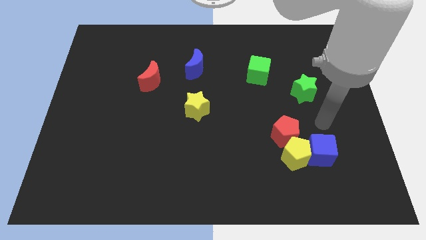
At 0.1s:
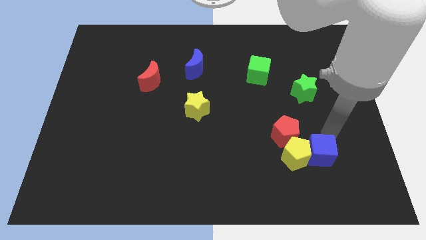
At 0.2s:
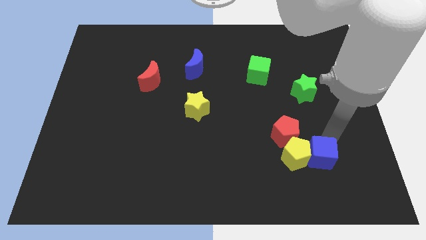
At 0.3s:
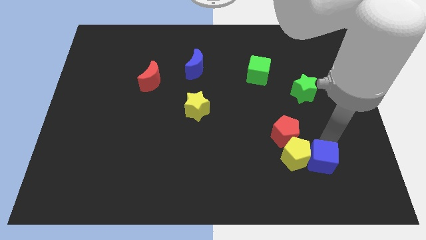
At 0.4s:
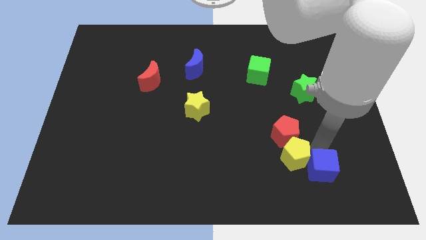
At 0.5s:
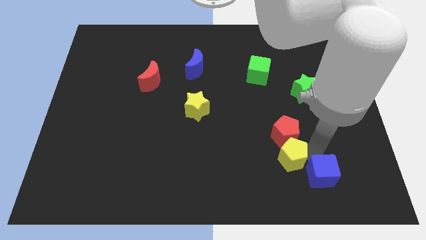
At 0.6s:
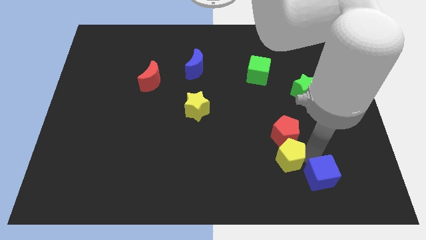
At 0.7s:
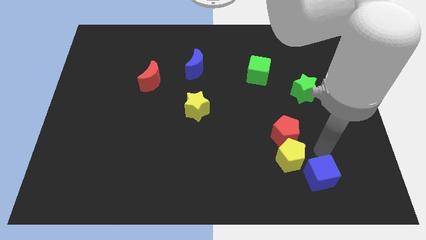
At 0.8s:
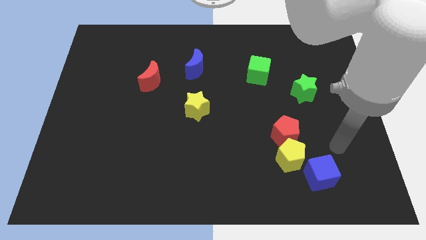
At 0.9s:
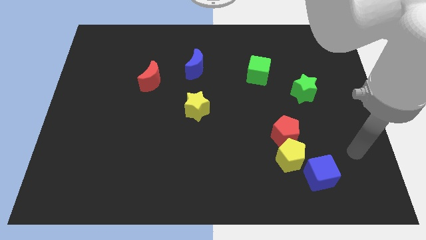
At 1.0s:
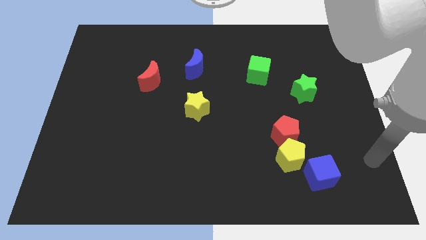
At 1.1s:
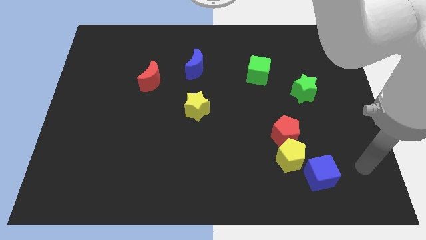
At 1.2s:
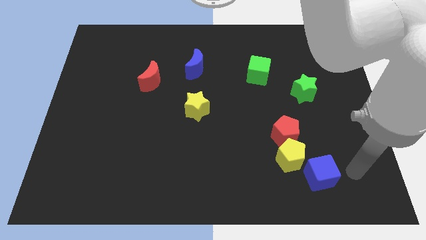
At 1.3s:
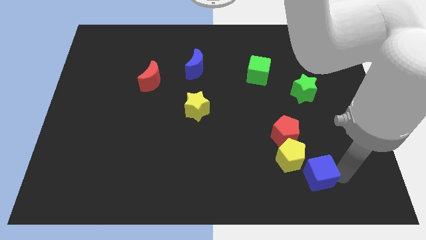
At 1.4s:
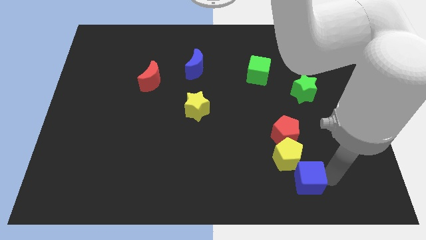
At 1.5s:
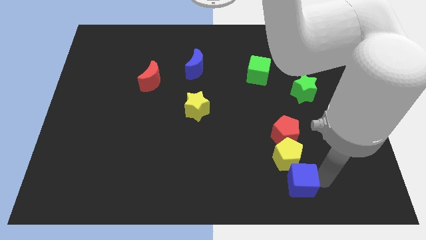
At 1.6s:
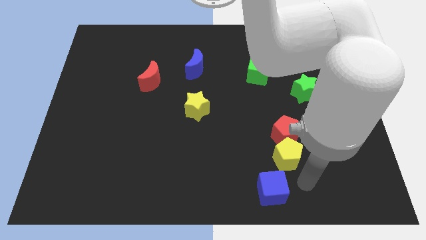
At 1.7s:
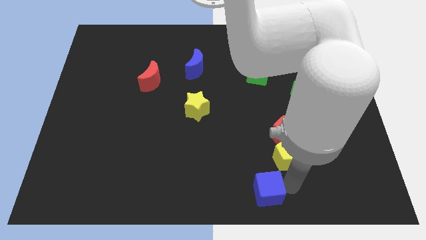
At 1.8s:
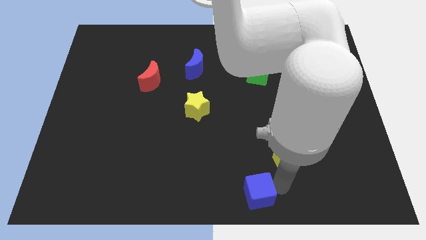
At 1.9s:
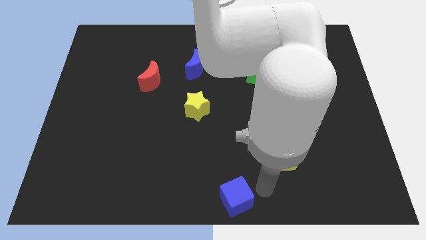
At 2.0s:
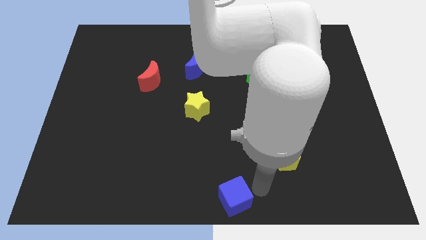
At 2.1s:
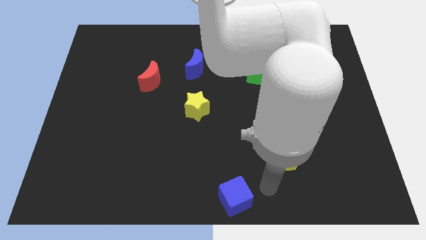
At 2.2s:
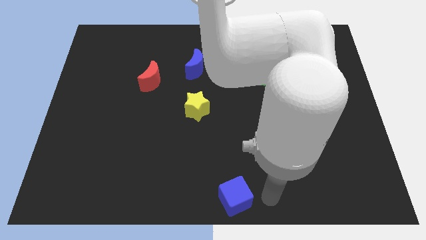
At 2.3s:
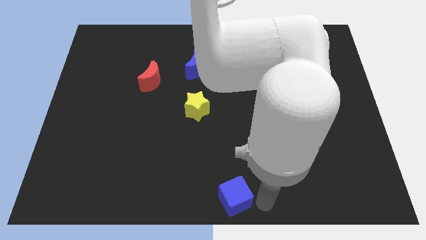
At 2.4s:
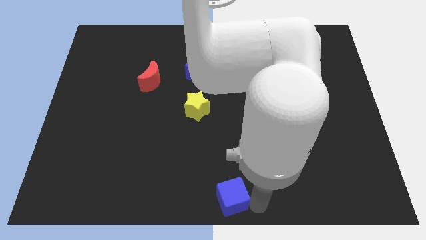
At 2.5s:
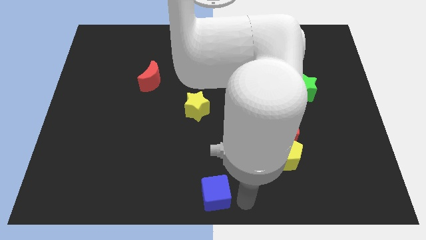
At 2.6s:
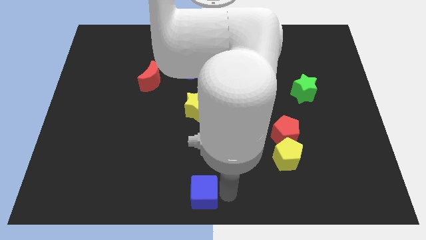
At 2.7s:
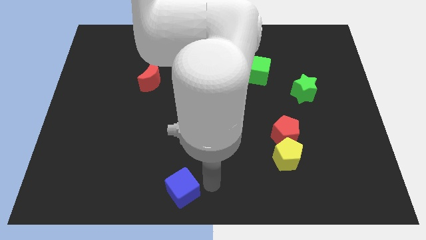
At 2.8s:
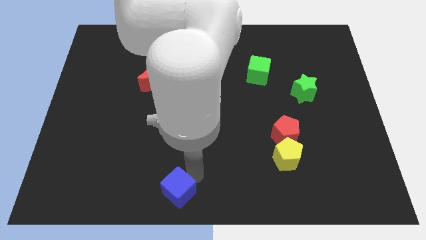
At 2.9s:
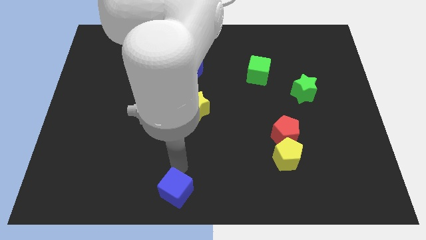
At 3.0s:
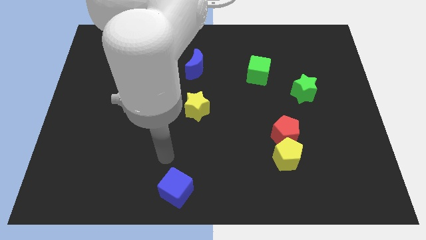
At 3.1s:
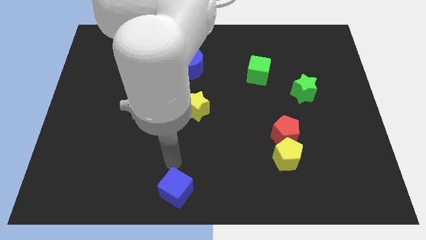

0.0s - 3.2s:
place the blue cube to the bottom center

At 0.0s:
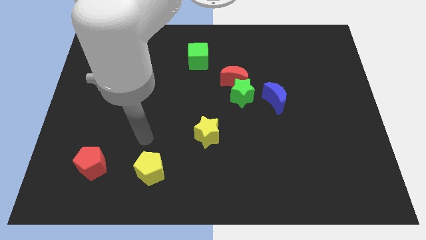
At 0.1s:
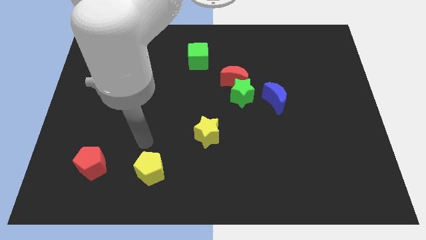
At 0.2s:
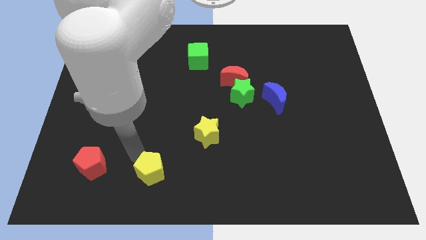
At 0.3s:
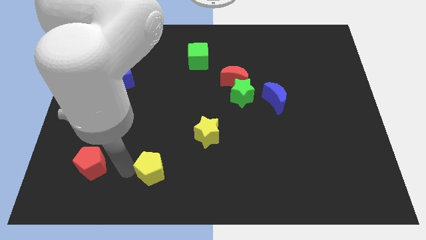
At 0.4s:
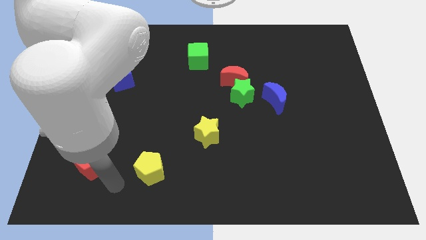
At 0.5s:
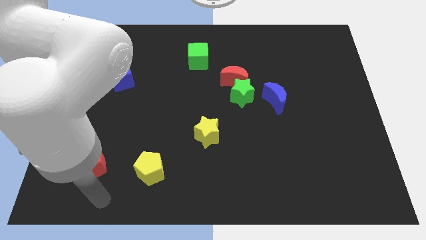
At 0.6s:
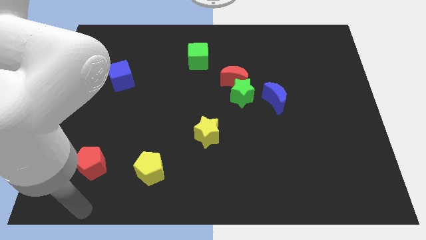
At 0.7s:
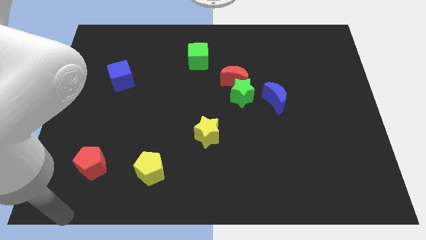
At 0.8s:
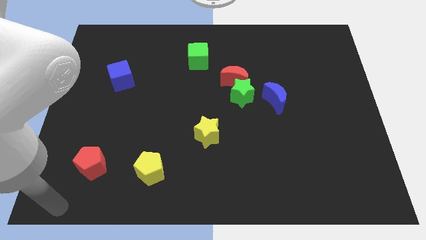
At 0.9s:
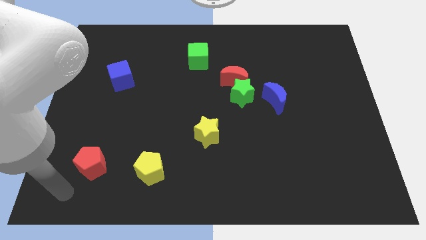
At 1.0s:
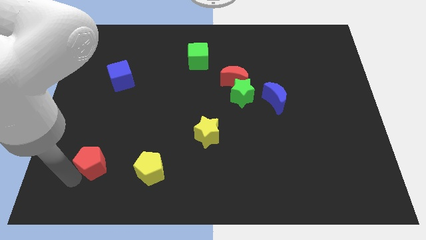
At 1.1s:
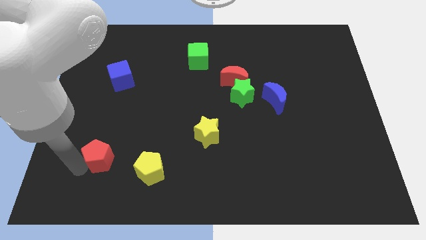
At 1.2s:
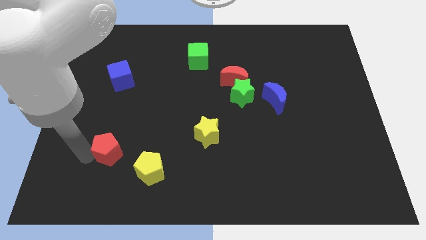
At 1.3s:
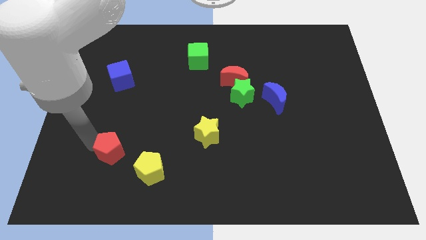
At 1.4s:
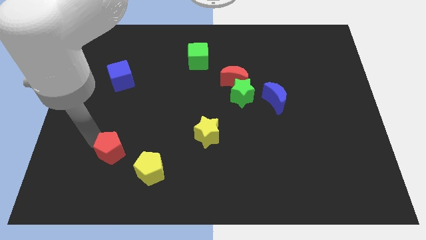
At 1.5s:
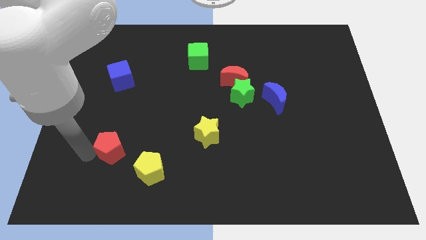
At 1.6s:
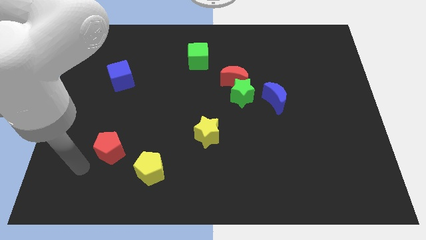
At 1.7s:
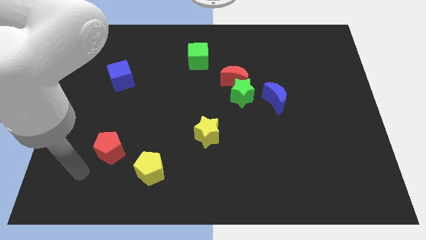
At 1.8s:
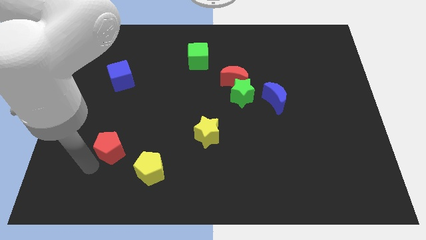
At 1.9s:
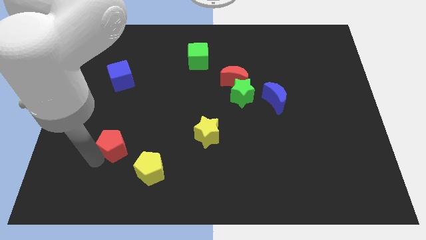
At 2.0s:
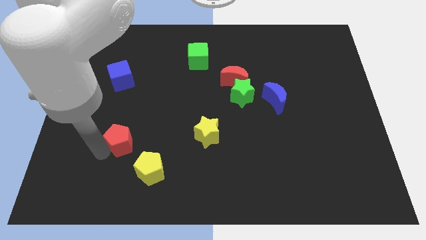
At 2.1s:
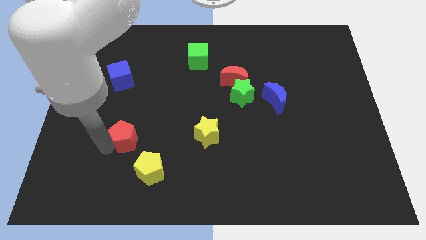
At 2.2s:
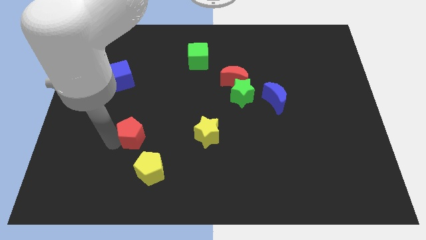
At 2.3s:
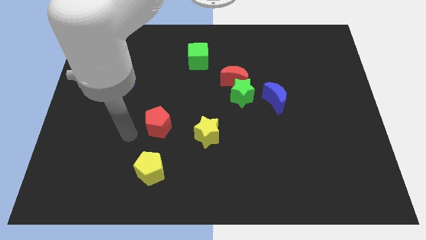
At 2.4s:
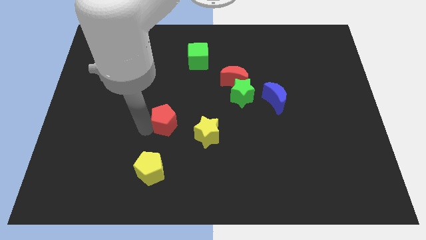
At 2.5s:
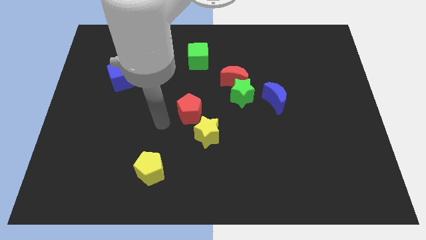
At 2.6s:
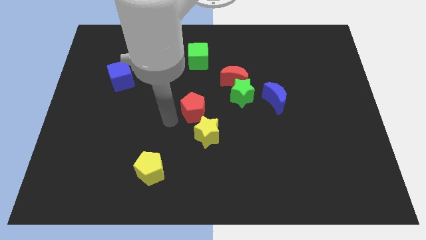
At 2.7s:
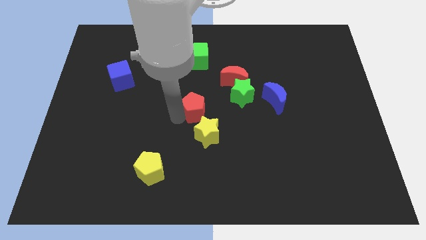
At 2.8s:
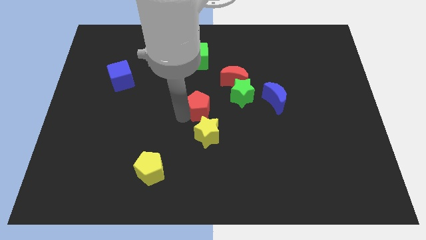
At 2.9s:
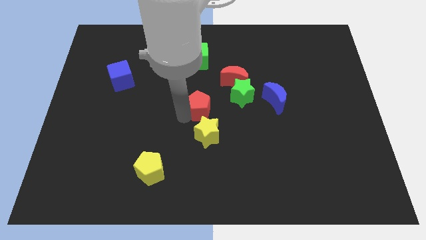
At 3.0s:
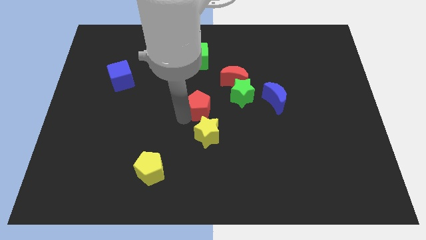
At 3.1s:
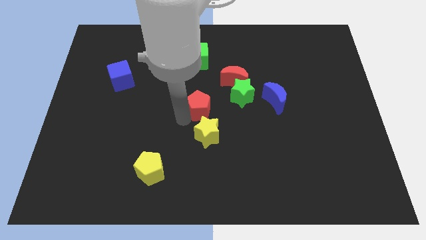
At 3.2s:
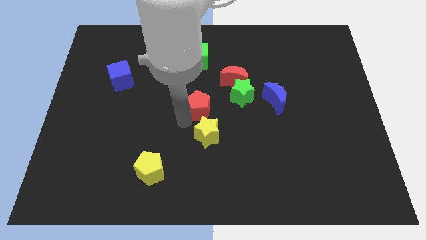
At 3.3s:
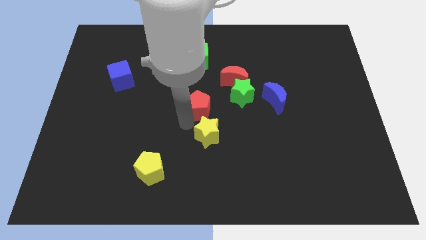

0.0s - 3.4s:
move red pentagon to the top of the yellow star

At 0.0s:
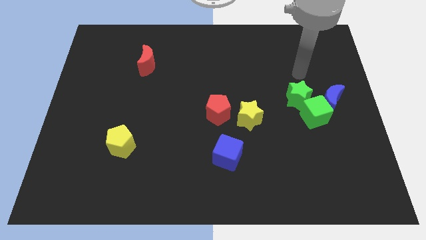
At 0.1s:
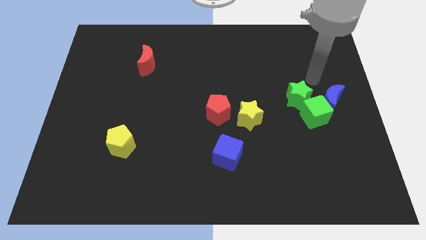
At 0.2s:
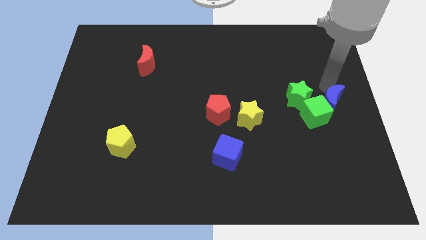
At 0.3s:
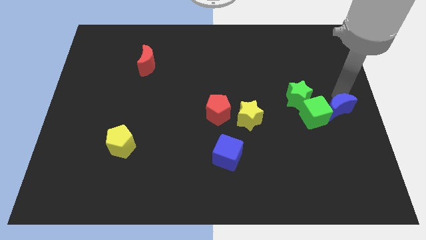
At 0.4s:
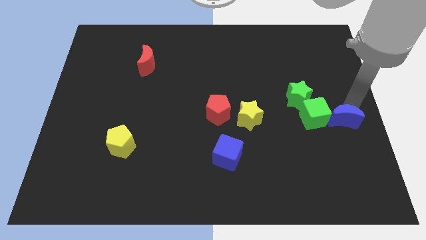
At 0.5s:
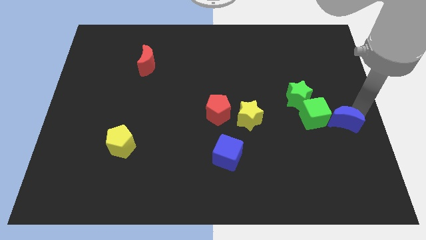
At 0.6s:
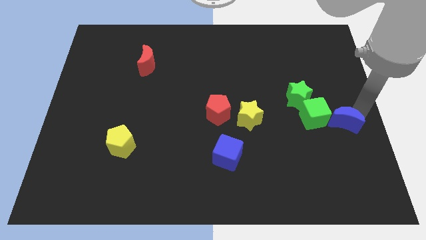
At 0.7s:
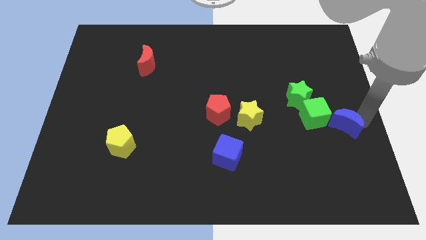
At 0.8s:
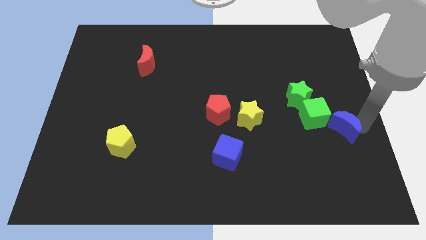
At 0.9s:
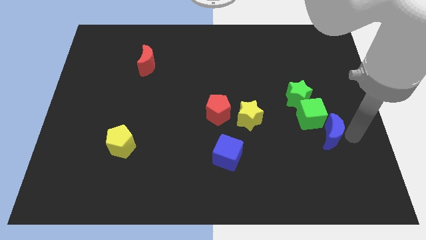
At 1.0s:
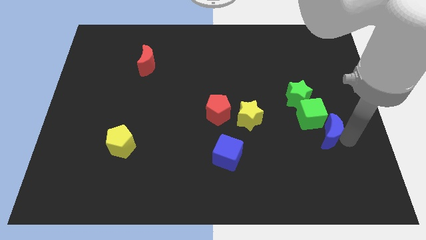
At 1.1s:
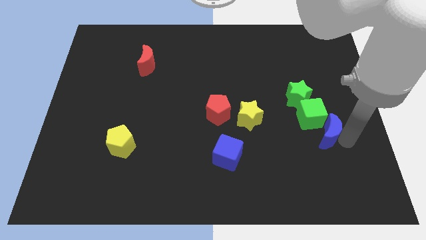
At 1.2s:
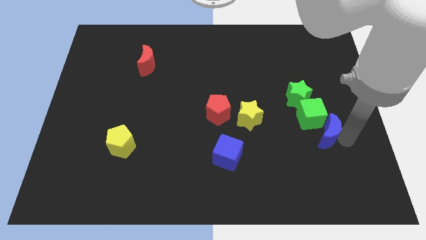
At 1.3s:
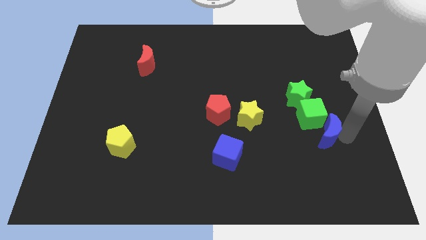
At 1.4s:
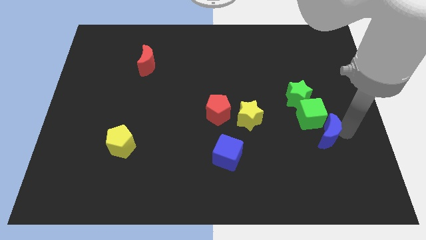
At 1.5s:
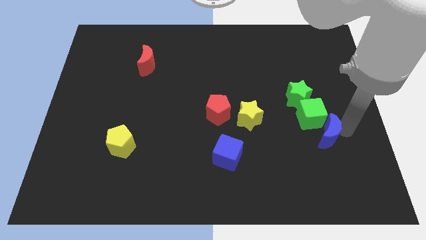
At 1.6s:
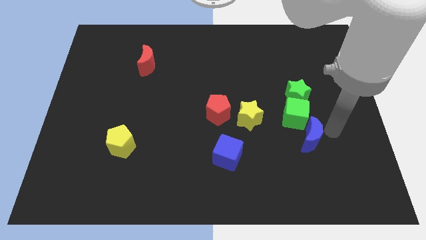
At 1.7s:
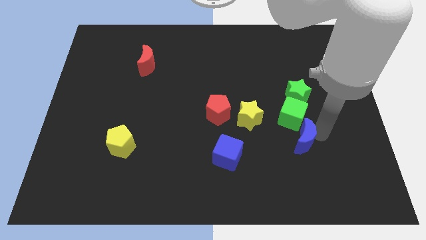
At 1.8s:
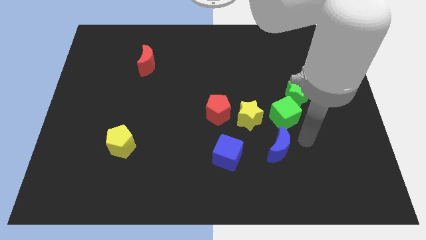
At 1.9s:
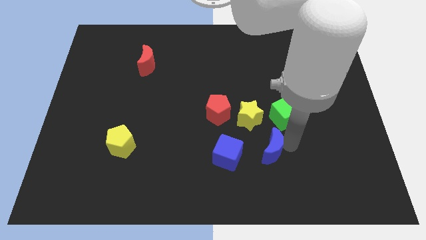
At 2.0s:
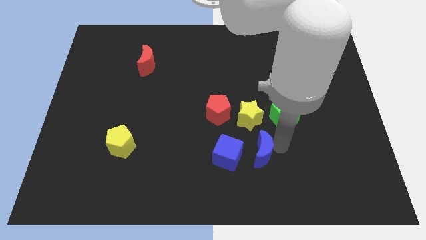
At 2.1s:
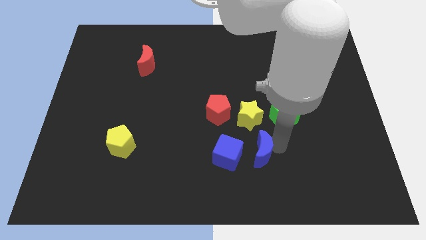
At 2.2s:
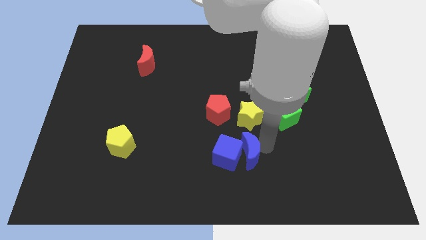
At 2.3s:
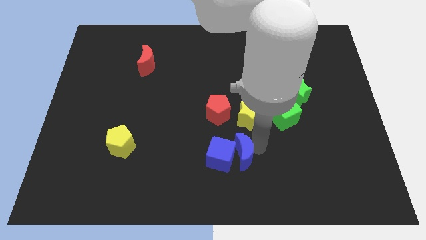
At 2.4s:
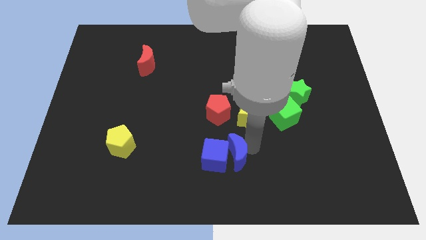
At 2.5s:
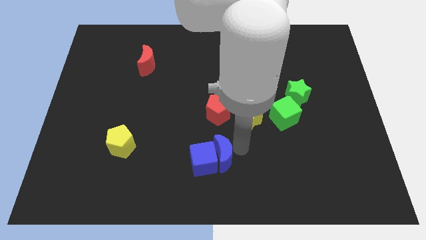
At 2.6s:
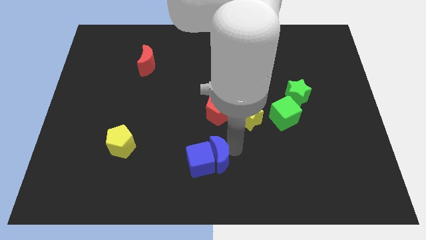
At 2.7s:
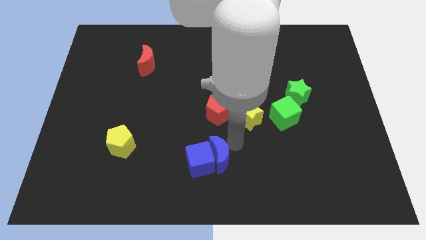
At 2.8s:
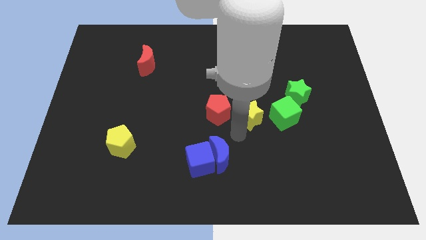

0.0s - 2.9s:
move the blue moon into the blue cube
